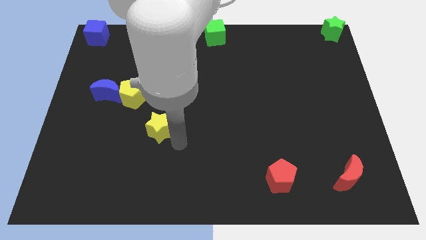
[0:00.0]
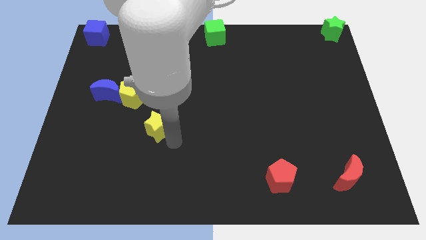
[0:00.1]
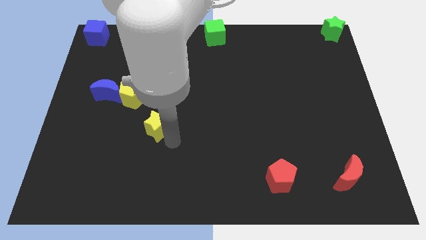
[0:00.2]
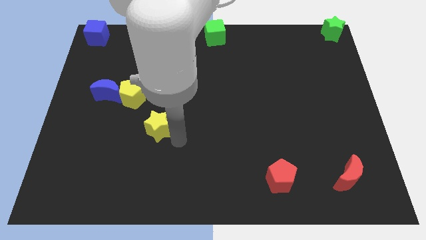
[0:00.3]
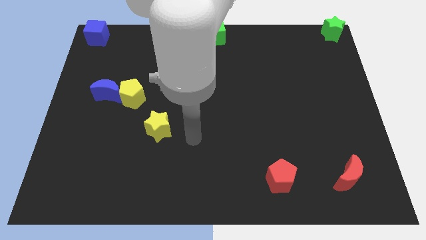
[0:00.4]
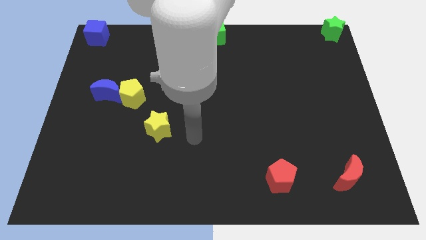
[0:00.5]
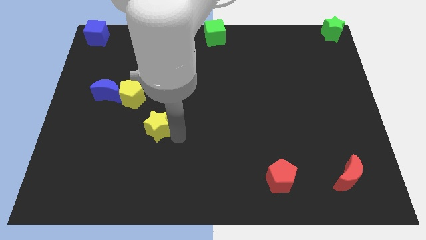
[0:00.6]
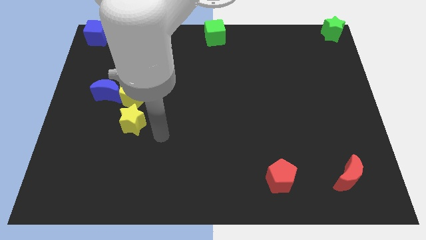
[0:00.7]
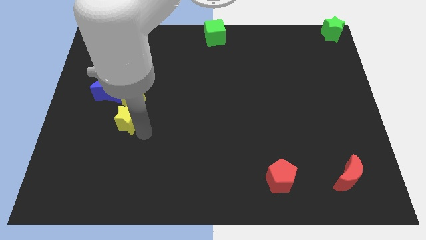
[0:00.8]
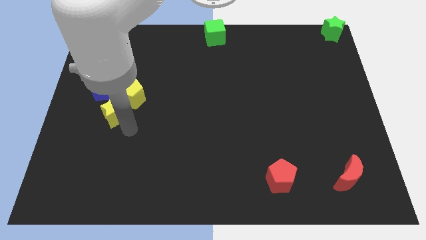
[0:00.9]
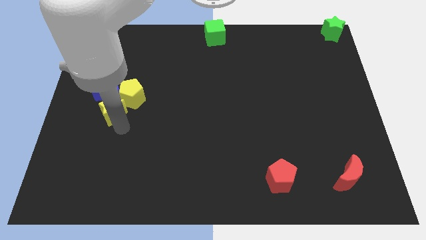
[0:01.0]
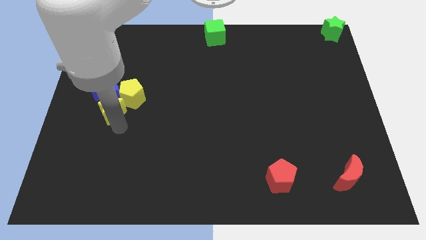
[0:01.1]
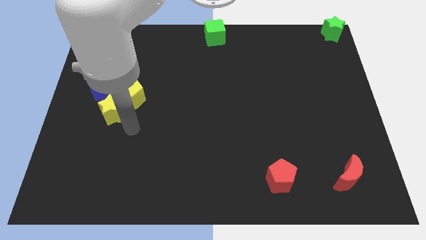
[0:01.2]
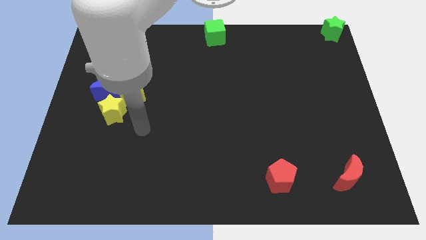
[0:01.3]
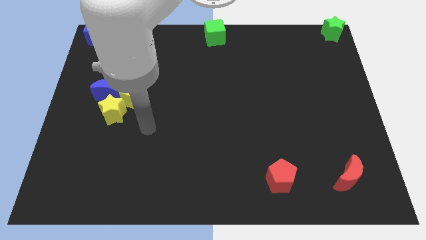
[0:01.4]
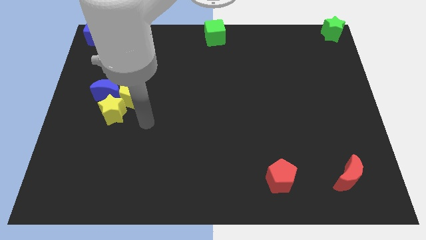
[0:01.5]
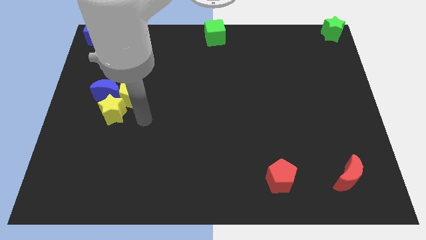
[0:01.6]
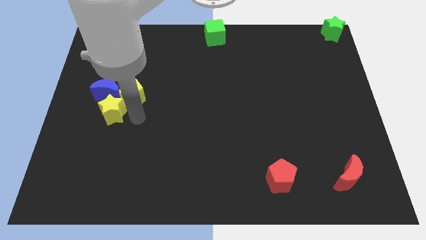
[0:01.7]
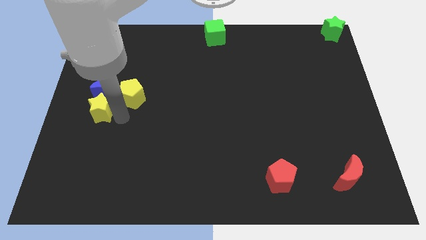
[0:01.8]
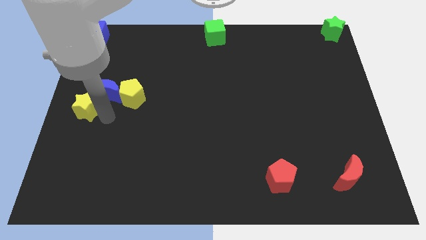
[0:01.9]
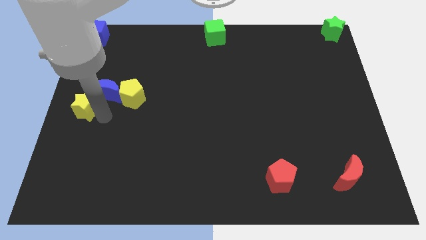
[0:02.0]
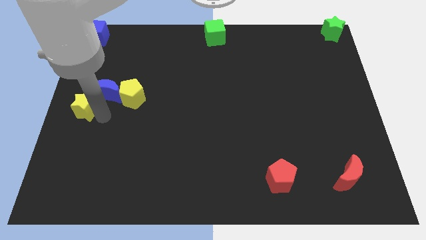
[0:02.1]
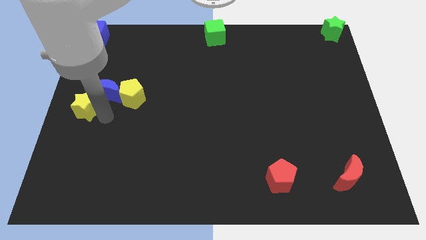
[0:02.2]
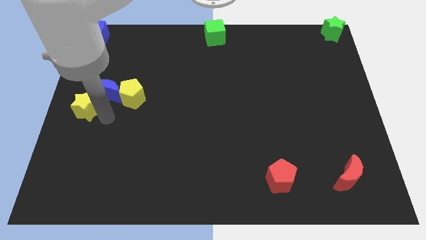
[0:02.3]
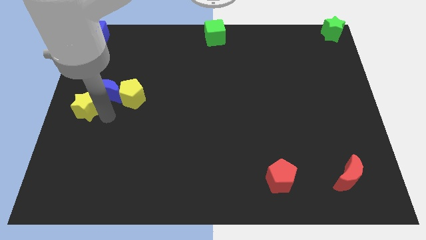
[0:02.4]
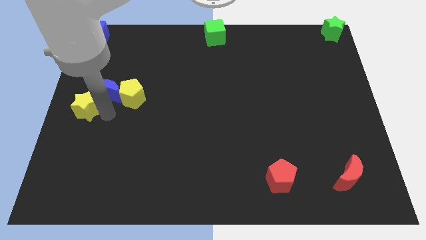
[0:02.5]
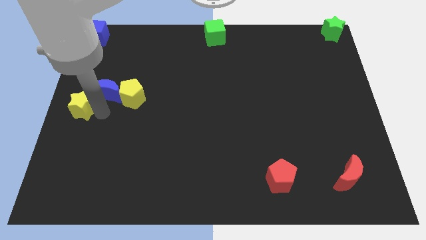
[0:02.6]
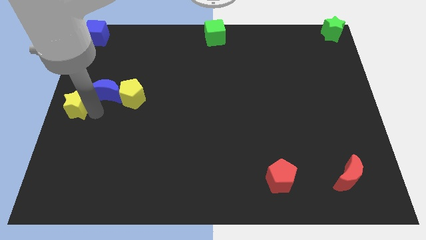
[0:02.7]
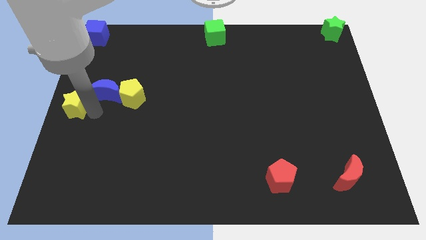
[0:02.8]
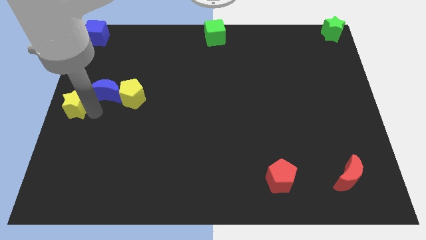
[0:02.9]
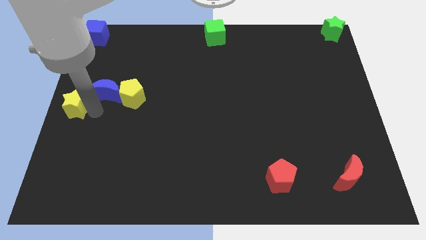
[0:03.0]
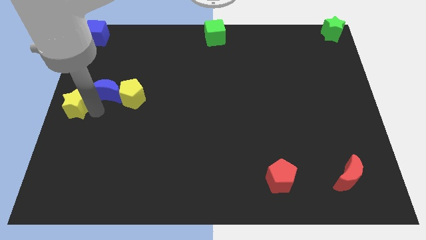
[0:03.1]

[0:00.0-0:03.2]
move the yellow star to the center left corner of the board

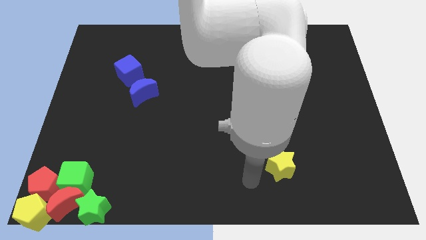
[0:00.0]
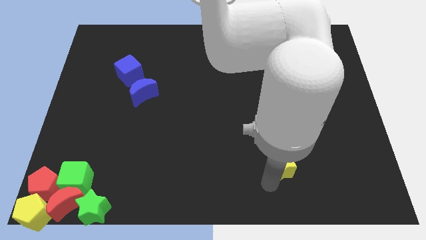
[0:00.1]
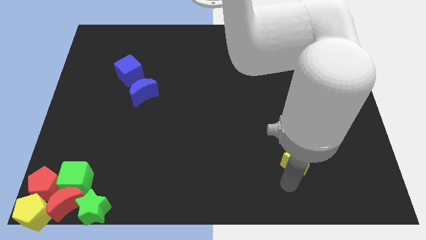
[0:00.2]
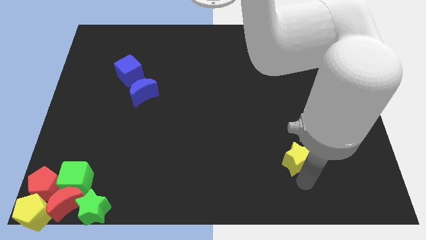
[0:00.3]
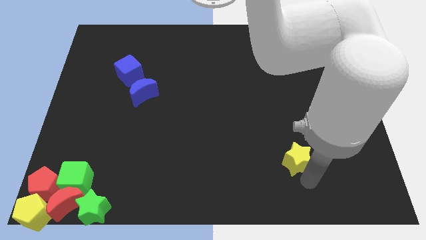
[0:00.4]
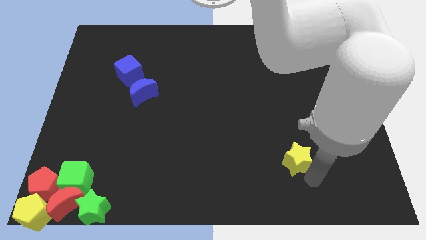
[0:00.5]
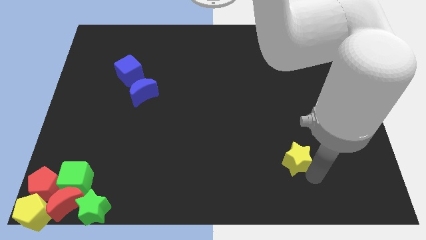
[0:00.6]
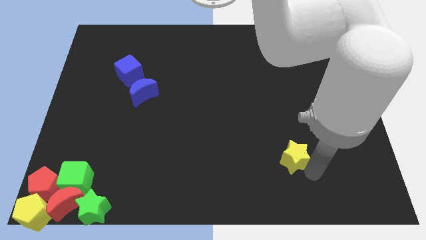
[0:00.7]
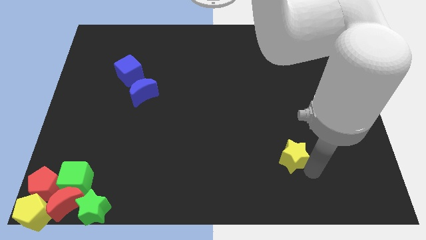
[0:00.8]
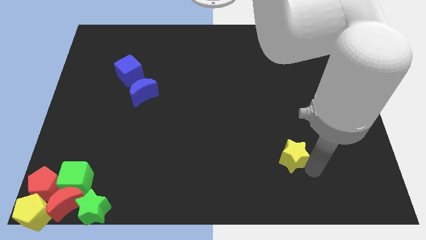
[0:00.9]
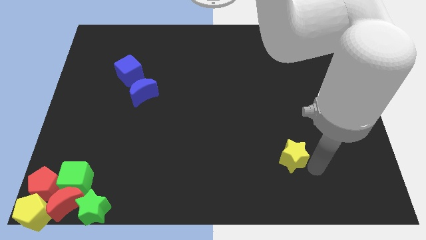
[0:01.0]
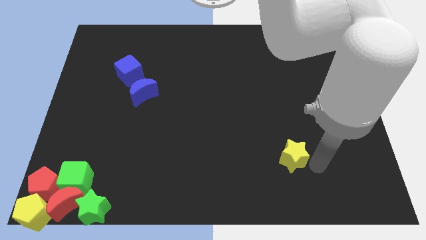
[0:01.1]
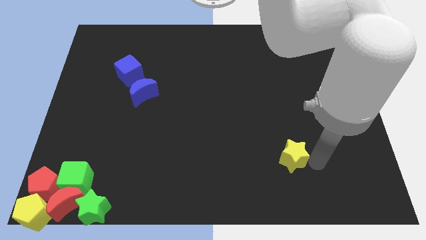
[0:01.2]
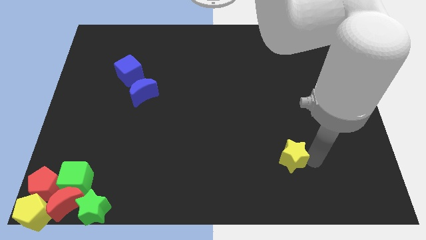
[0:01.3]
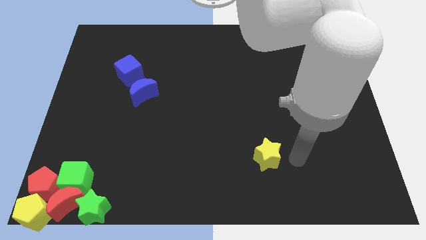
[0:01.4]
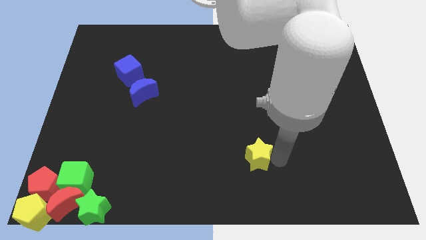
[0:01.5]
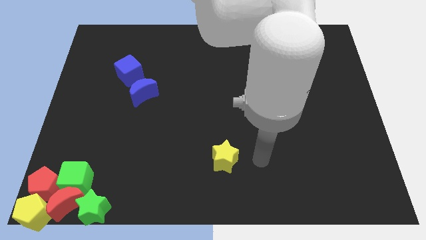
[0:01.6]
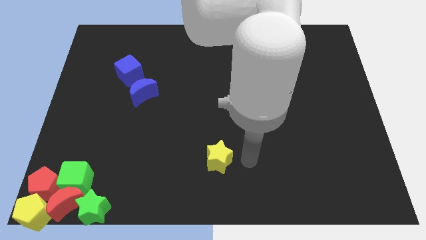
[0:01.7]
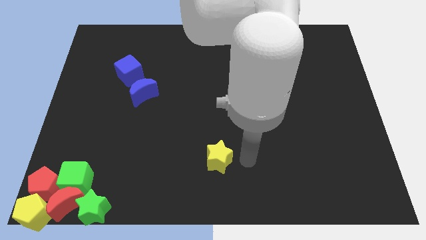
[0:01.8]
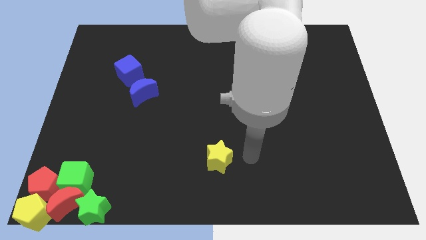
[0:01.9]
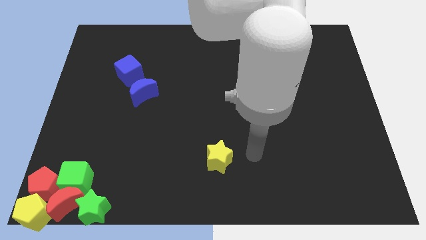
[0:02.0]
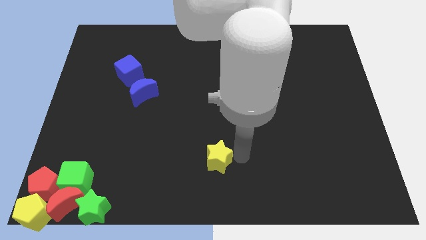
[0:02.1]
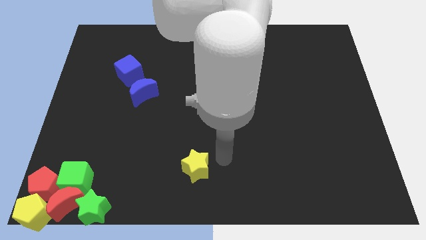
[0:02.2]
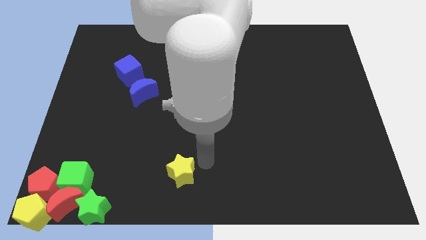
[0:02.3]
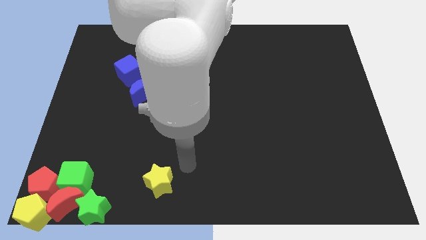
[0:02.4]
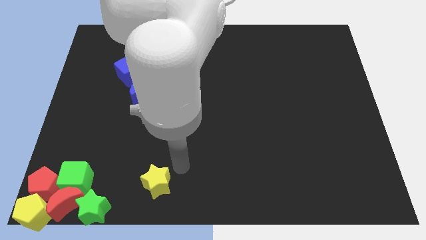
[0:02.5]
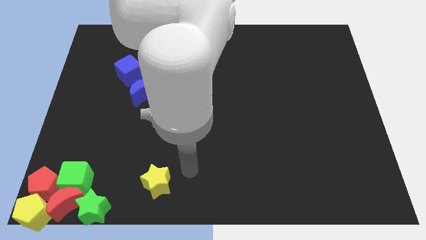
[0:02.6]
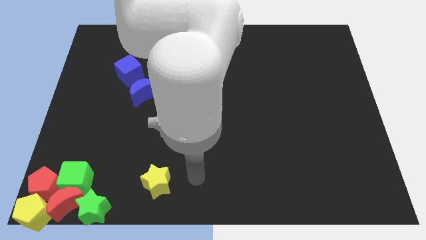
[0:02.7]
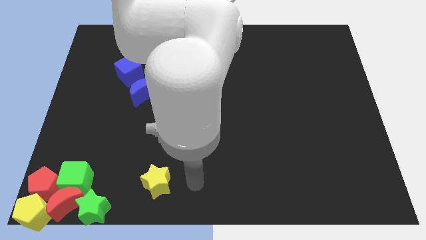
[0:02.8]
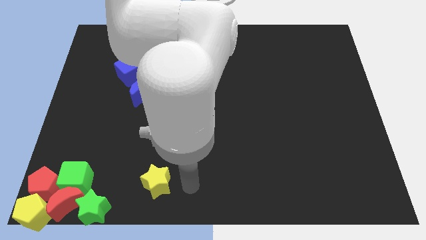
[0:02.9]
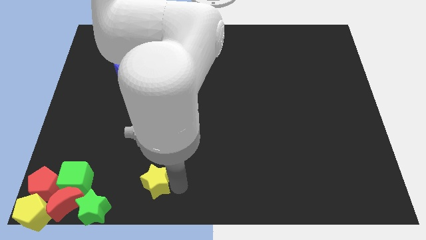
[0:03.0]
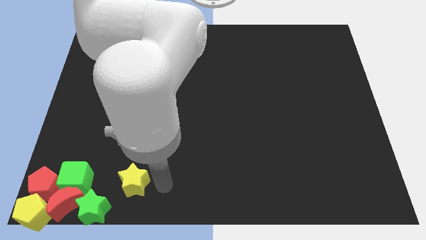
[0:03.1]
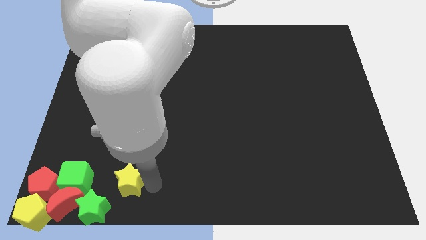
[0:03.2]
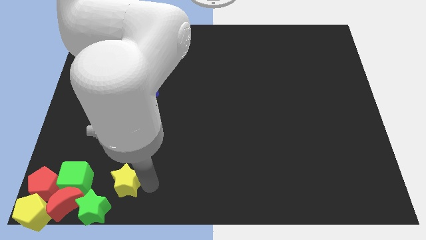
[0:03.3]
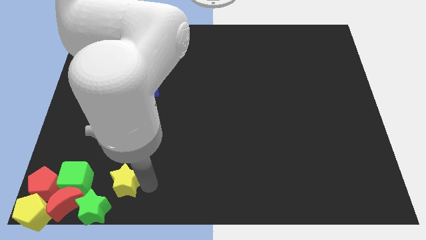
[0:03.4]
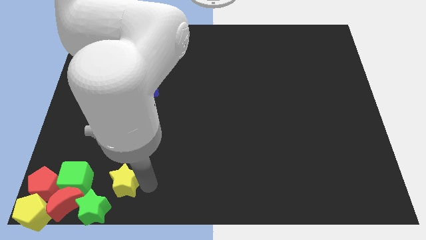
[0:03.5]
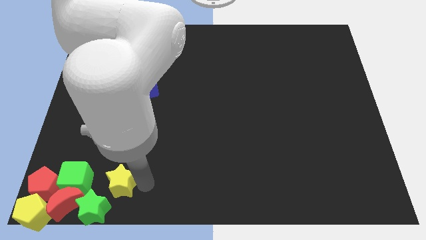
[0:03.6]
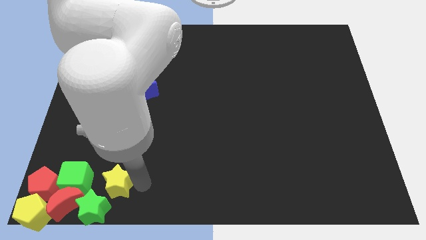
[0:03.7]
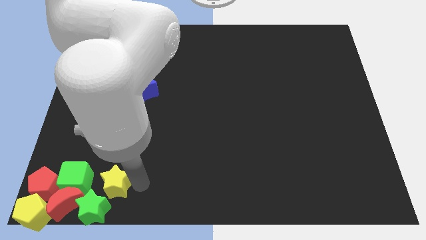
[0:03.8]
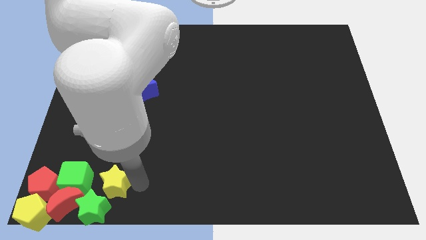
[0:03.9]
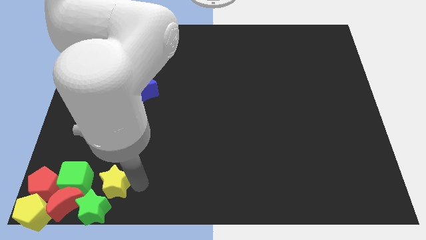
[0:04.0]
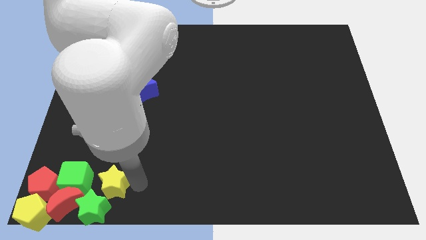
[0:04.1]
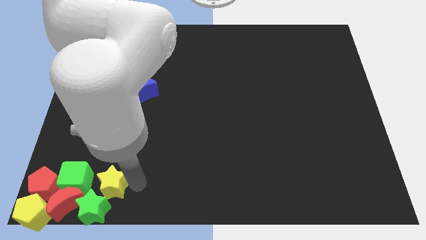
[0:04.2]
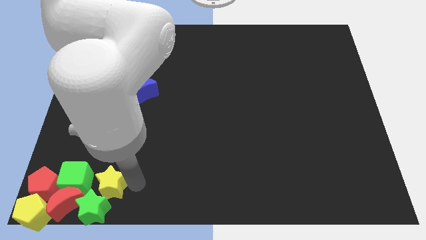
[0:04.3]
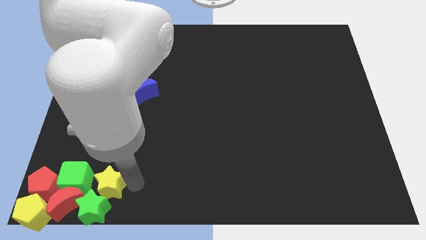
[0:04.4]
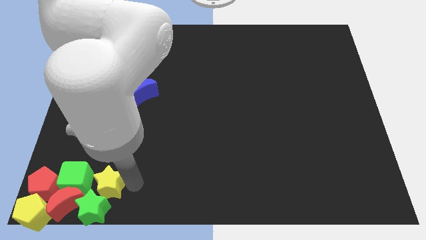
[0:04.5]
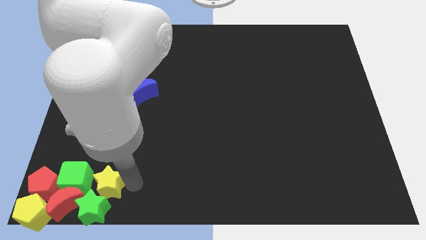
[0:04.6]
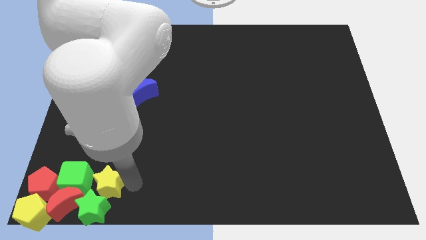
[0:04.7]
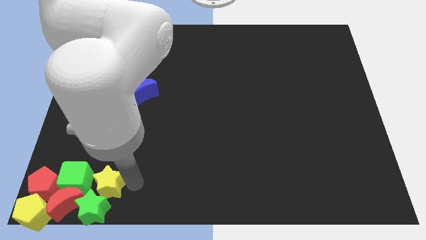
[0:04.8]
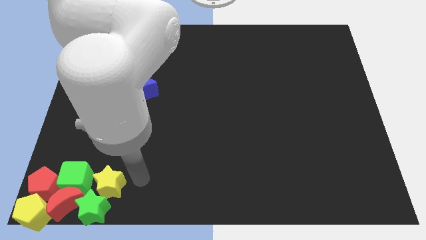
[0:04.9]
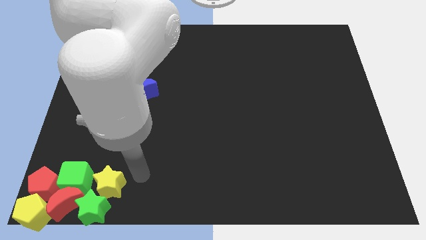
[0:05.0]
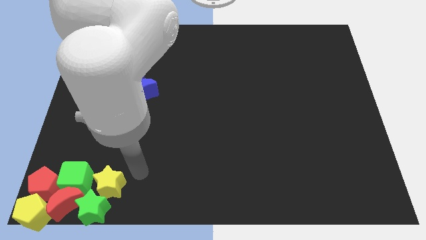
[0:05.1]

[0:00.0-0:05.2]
place the yellow star above the green star

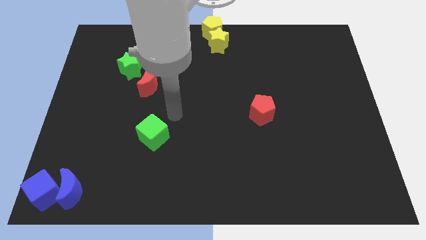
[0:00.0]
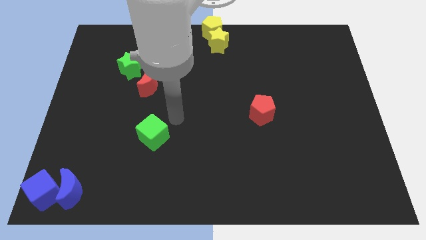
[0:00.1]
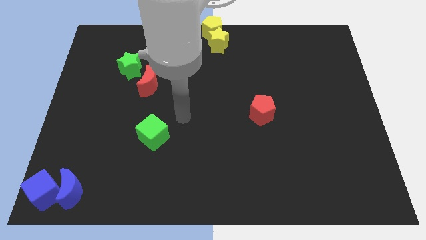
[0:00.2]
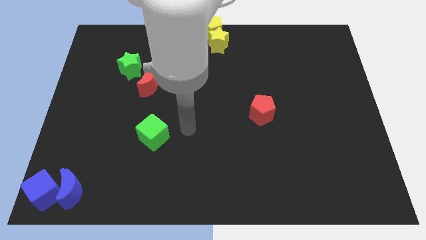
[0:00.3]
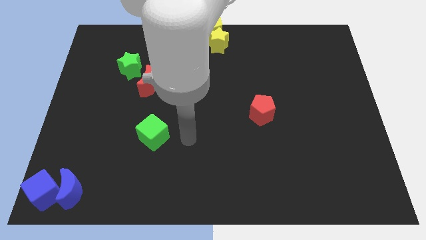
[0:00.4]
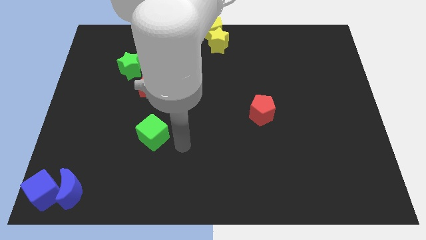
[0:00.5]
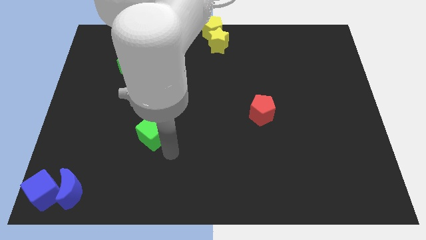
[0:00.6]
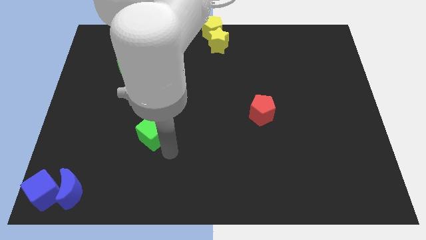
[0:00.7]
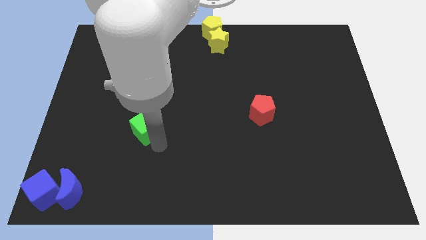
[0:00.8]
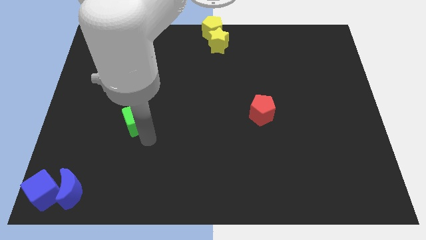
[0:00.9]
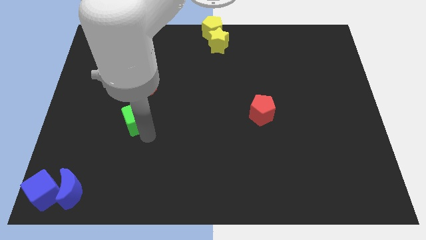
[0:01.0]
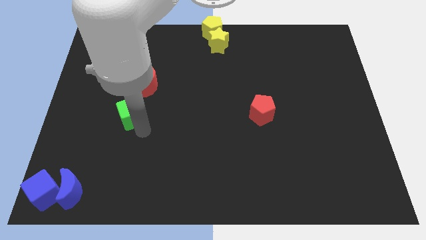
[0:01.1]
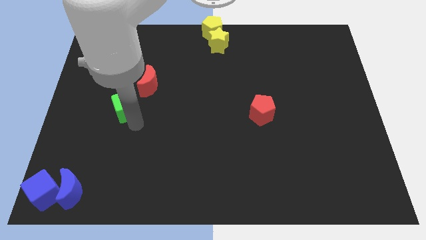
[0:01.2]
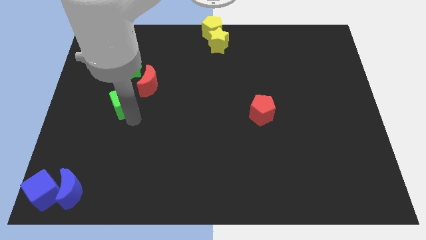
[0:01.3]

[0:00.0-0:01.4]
slide the green cube horizontally to the left side of the red pentagon
